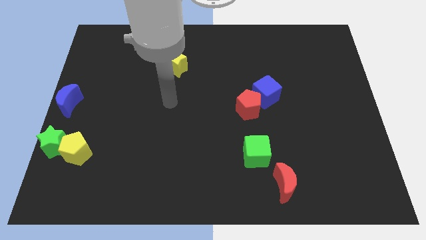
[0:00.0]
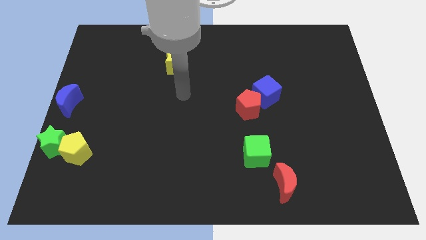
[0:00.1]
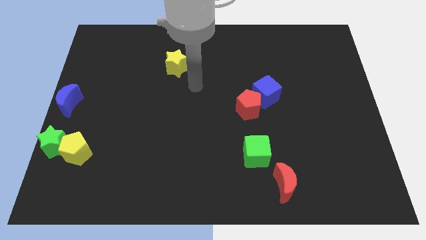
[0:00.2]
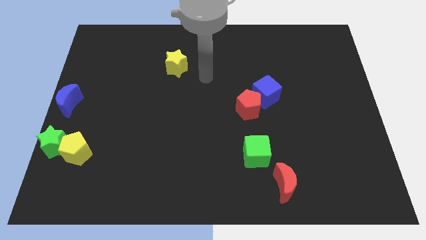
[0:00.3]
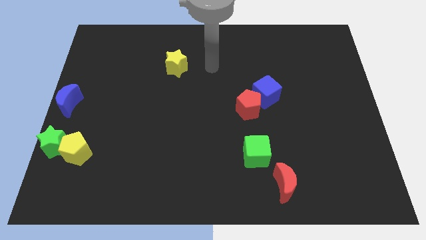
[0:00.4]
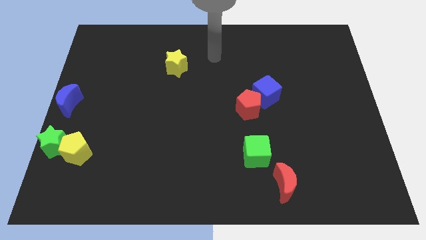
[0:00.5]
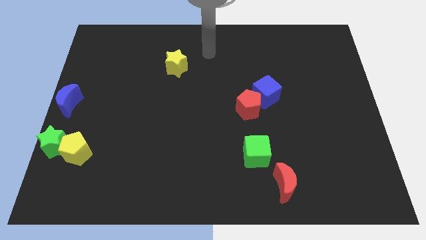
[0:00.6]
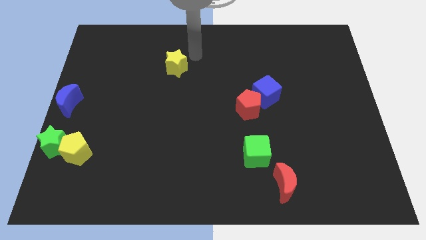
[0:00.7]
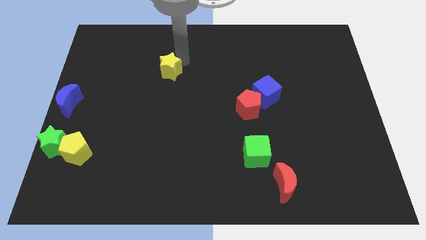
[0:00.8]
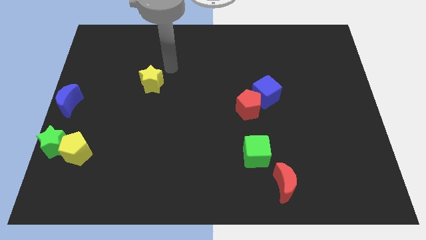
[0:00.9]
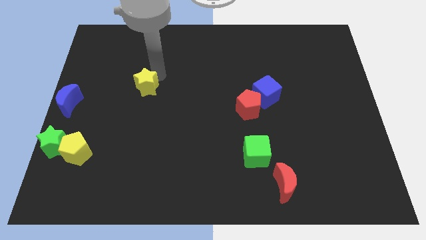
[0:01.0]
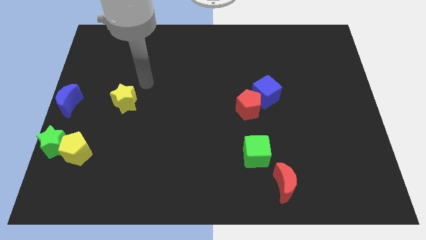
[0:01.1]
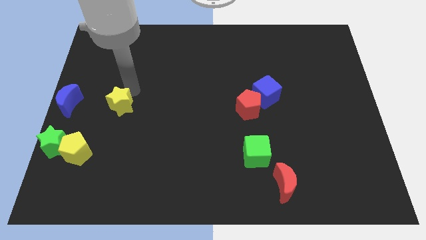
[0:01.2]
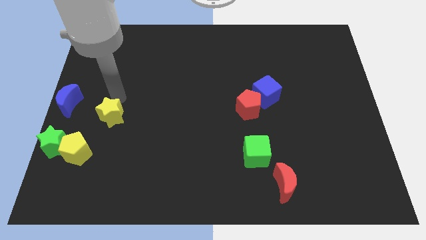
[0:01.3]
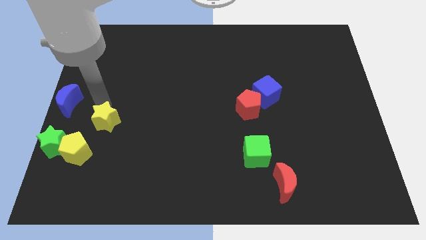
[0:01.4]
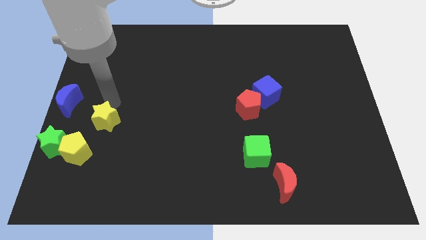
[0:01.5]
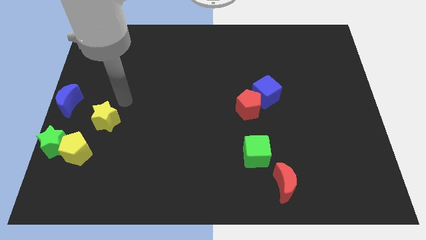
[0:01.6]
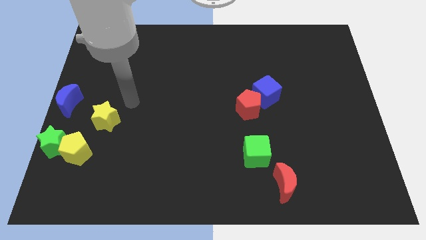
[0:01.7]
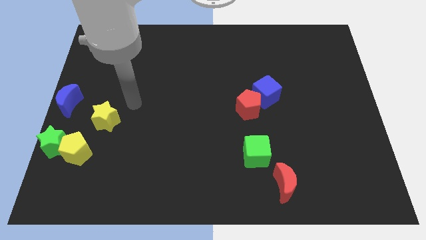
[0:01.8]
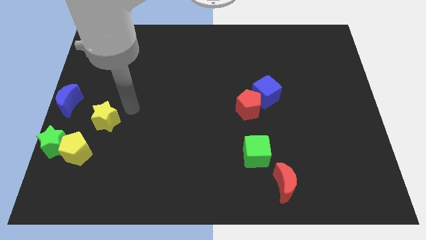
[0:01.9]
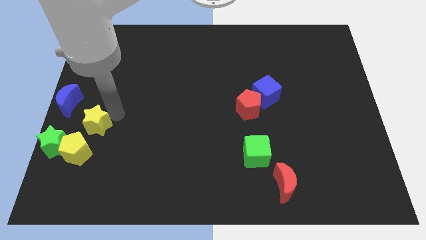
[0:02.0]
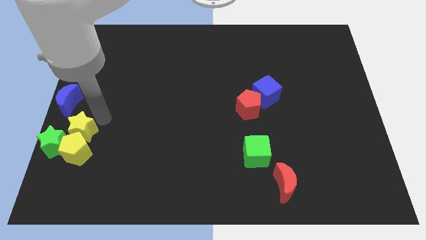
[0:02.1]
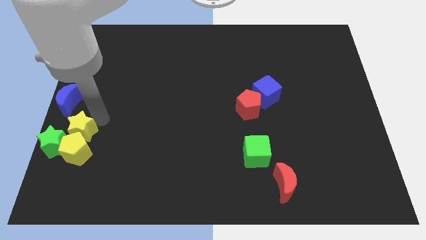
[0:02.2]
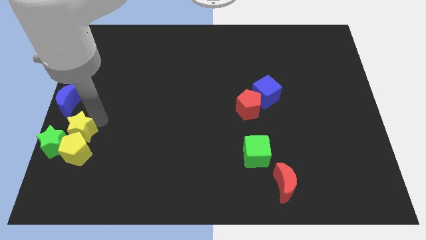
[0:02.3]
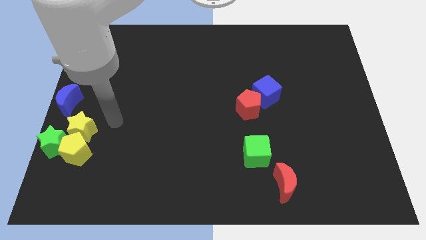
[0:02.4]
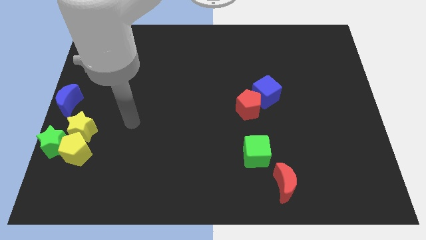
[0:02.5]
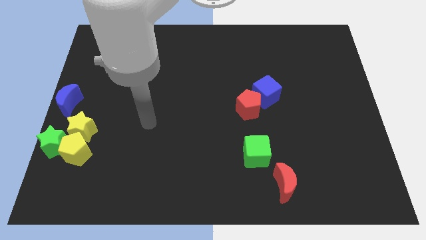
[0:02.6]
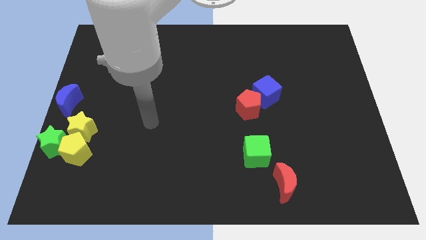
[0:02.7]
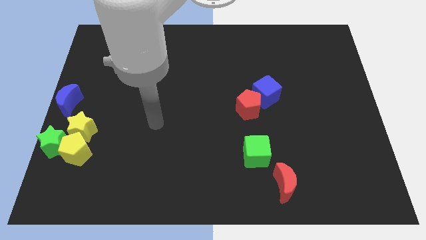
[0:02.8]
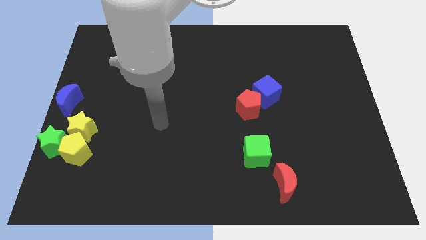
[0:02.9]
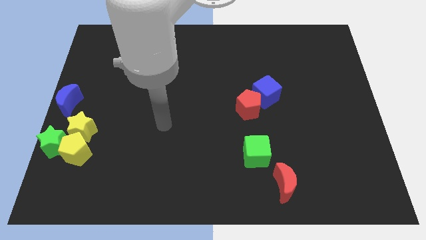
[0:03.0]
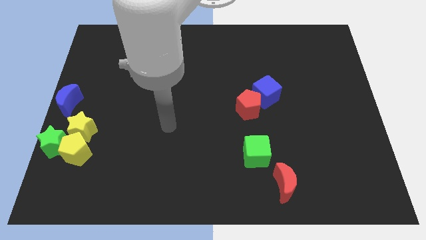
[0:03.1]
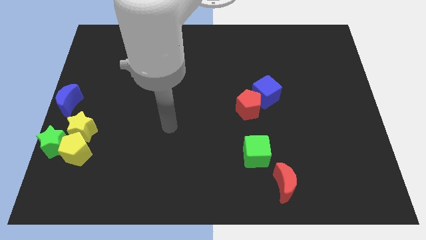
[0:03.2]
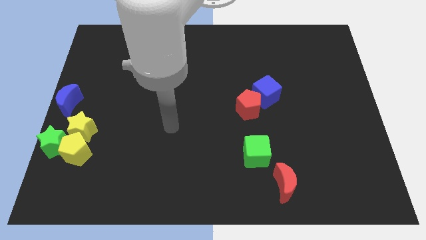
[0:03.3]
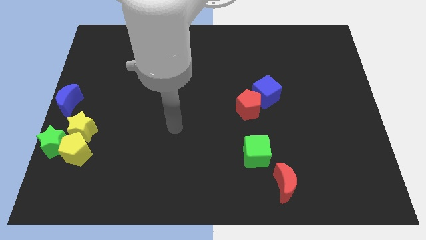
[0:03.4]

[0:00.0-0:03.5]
place yellow star to the top of yellow pentagon

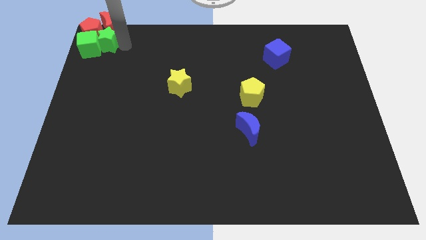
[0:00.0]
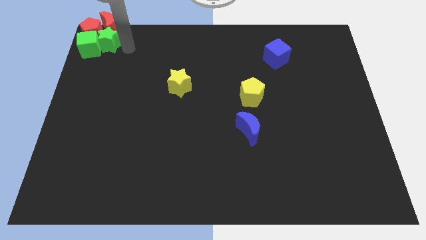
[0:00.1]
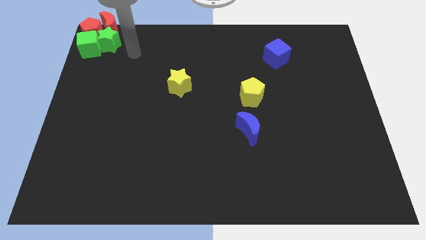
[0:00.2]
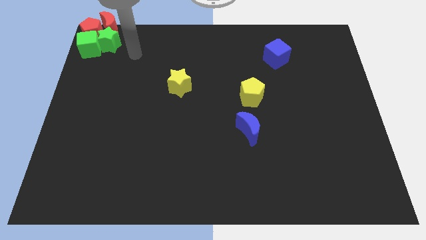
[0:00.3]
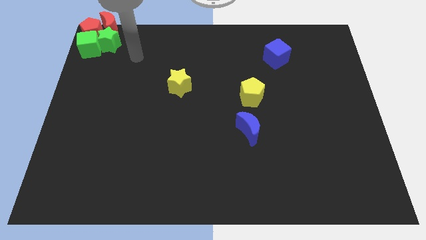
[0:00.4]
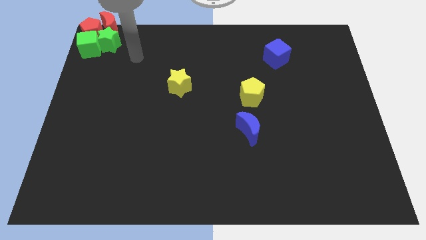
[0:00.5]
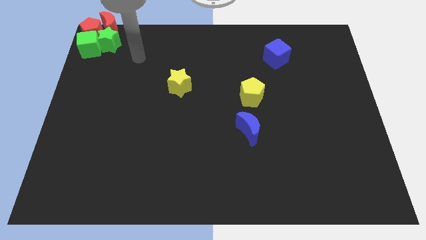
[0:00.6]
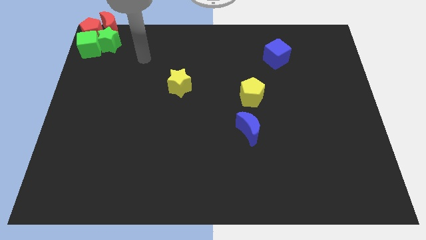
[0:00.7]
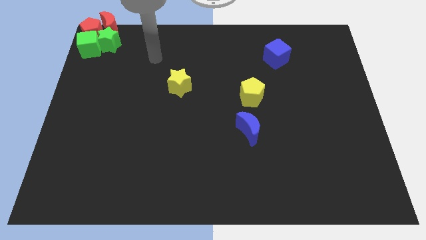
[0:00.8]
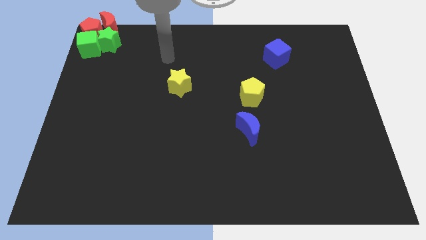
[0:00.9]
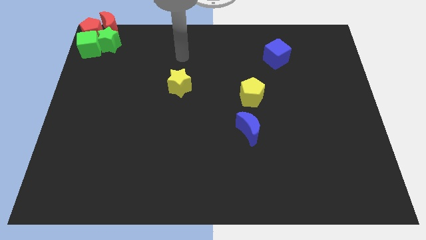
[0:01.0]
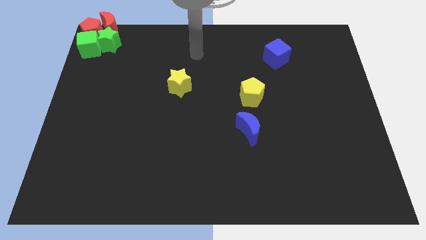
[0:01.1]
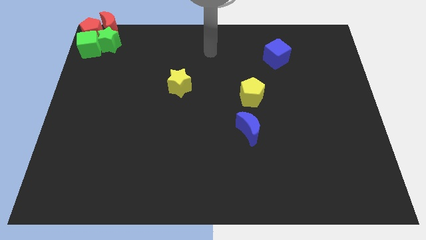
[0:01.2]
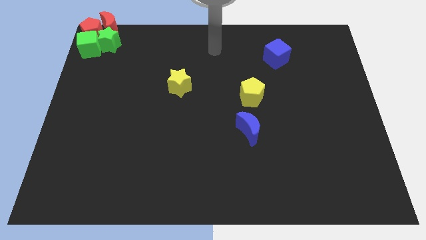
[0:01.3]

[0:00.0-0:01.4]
move the arm away from the green star

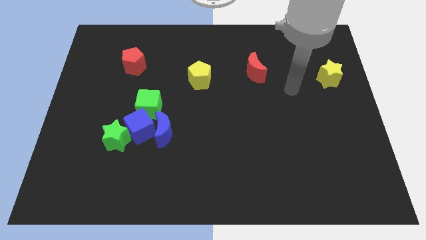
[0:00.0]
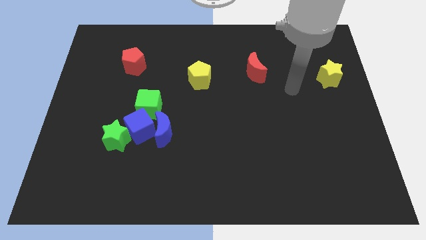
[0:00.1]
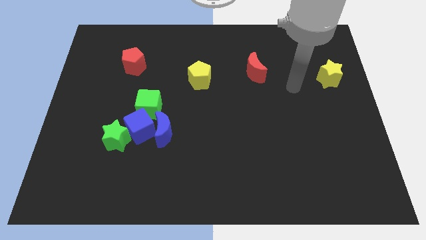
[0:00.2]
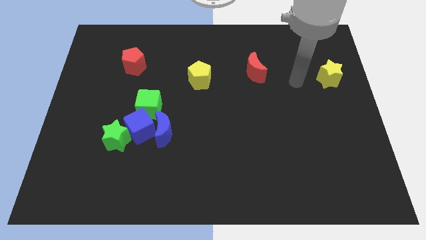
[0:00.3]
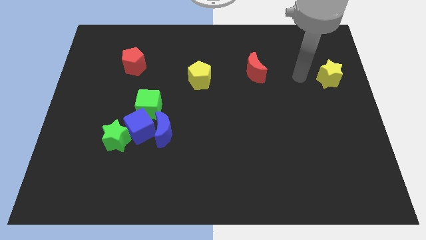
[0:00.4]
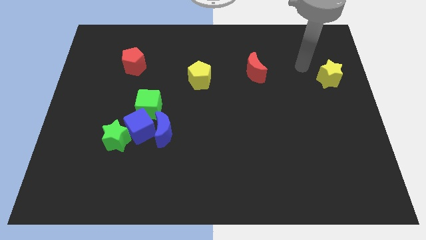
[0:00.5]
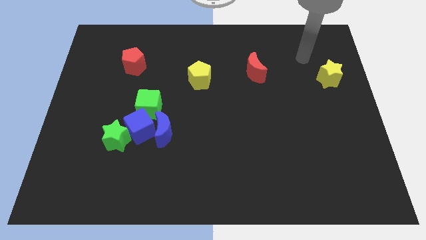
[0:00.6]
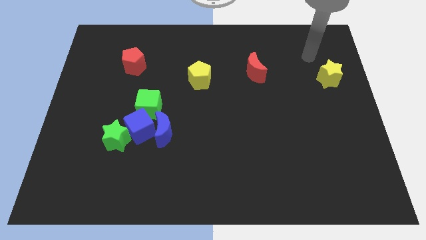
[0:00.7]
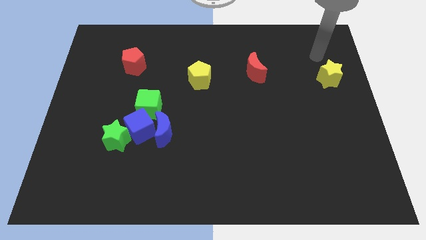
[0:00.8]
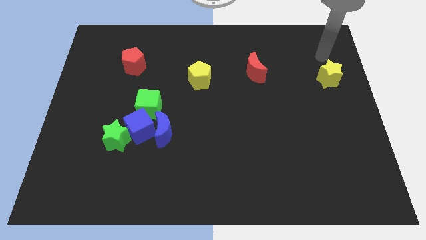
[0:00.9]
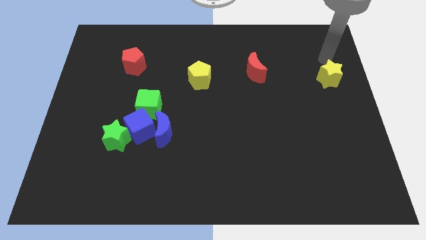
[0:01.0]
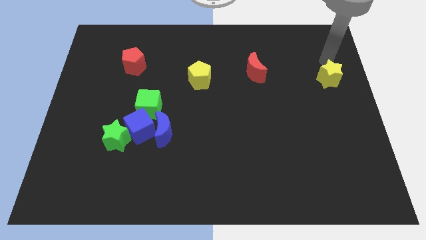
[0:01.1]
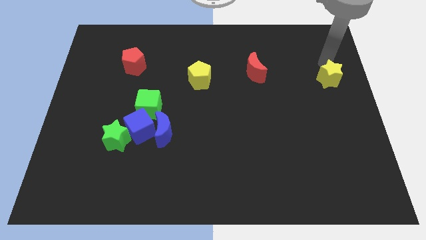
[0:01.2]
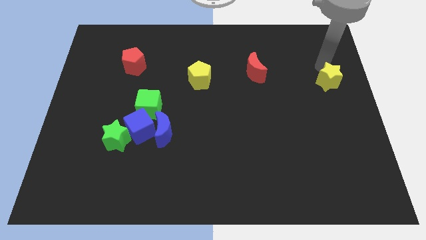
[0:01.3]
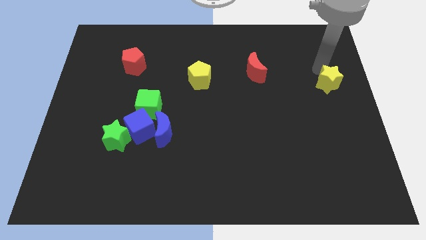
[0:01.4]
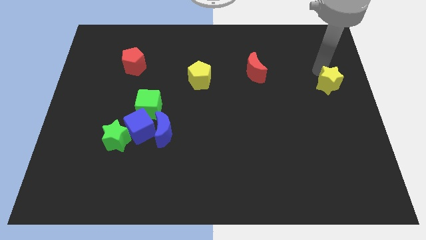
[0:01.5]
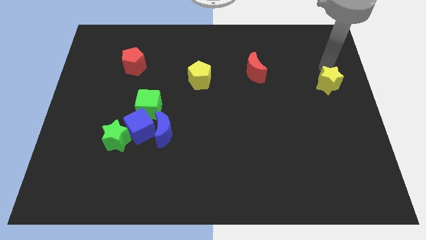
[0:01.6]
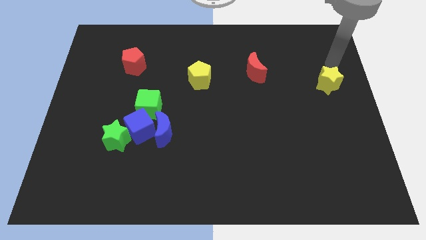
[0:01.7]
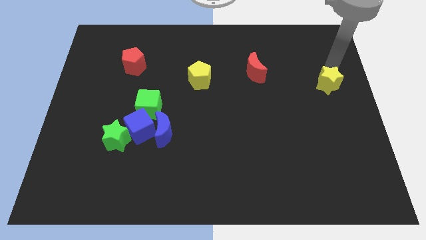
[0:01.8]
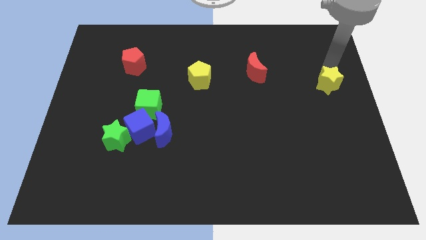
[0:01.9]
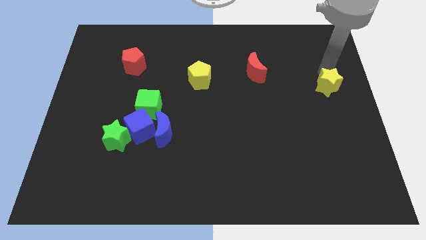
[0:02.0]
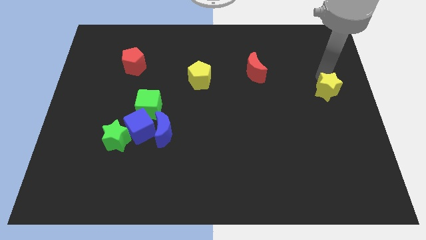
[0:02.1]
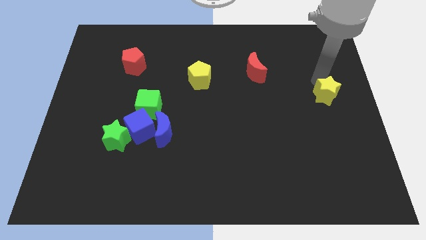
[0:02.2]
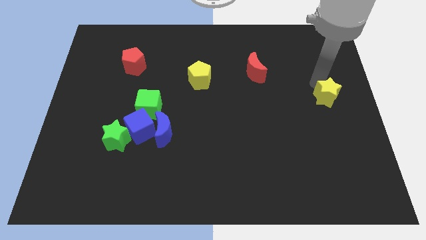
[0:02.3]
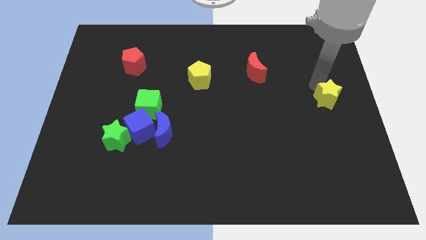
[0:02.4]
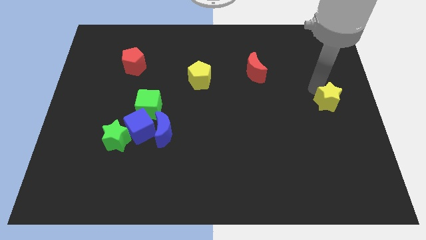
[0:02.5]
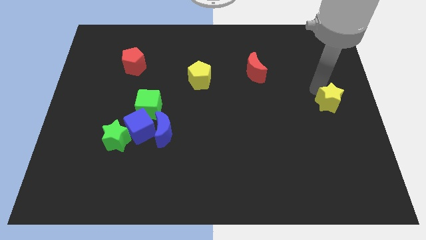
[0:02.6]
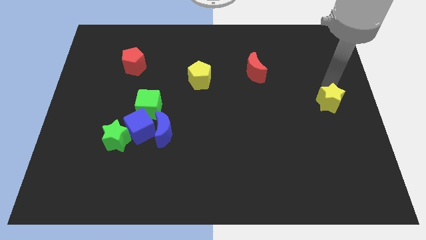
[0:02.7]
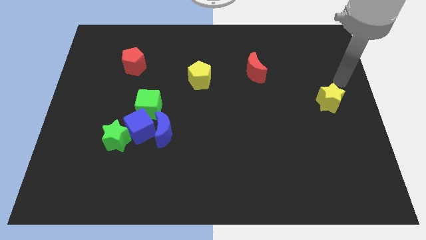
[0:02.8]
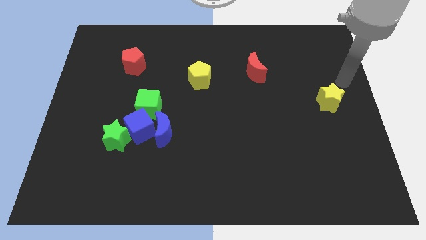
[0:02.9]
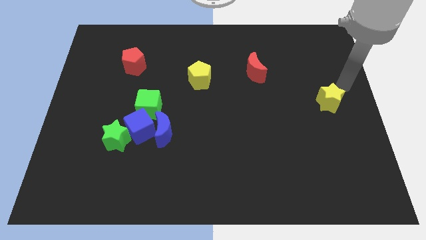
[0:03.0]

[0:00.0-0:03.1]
push yellow star slightly down

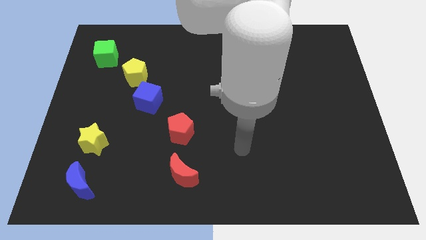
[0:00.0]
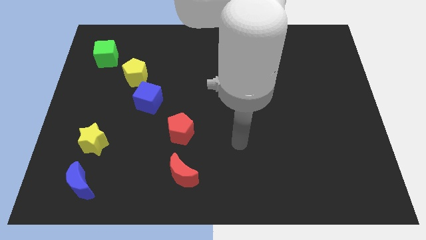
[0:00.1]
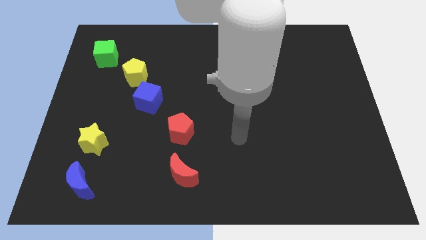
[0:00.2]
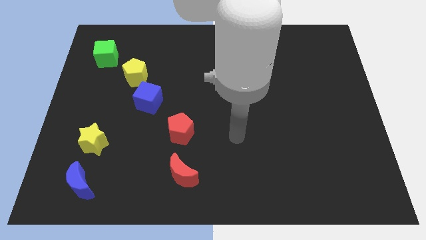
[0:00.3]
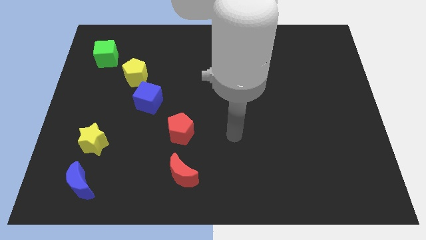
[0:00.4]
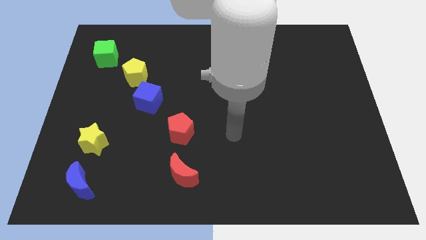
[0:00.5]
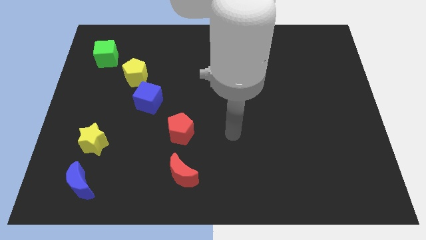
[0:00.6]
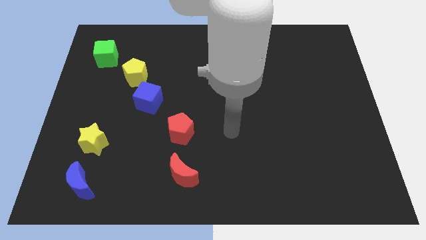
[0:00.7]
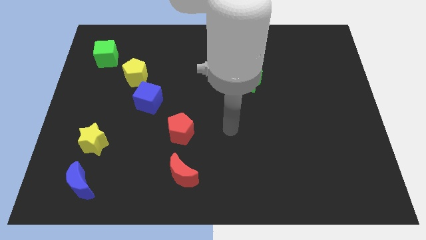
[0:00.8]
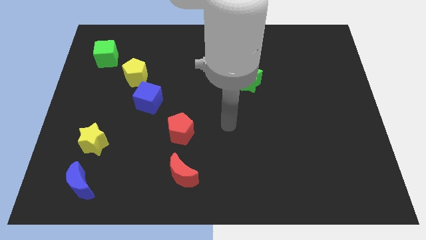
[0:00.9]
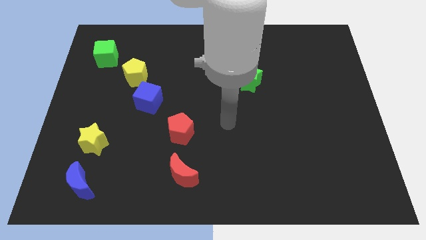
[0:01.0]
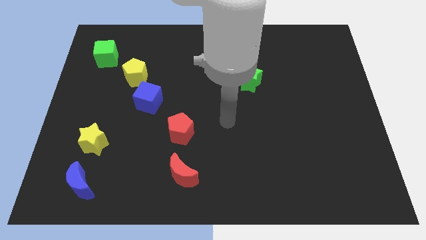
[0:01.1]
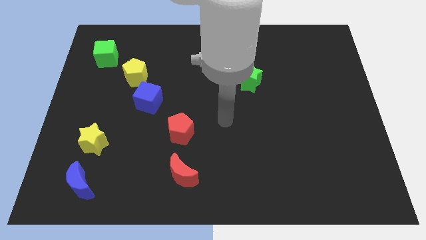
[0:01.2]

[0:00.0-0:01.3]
move your arm to the center
